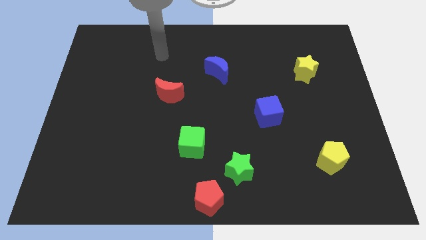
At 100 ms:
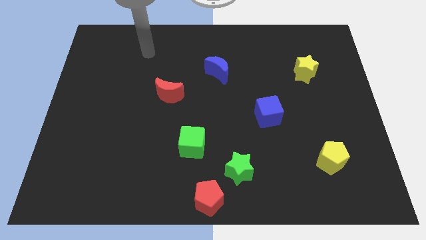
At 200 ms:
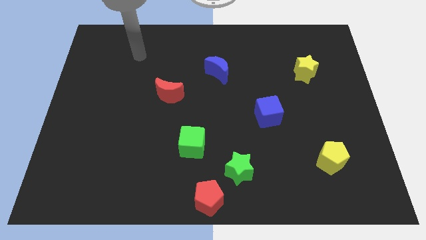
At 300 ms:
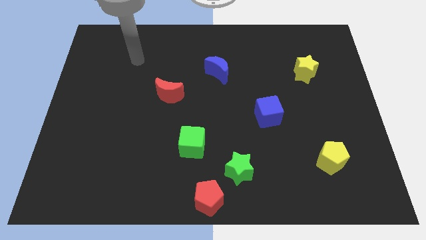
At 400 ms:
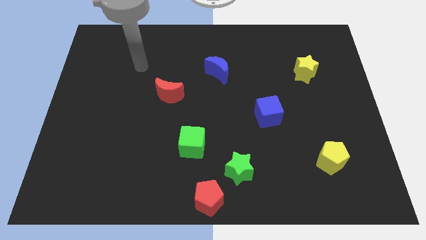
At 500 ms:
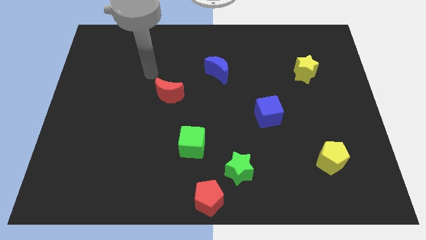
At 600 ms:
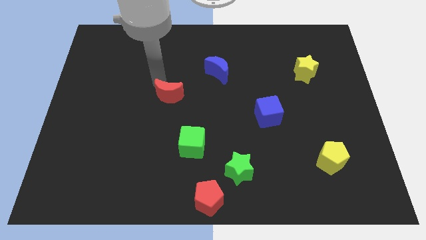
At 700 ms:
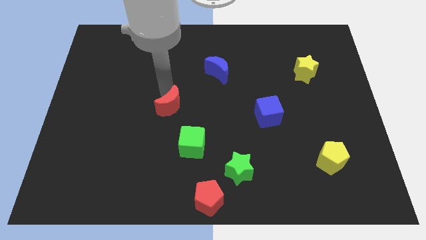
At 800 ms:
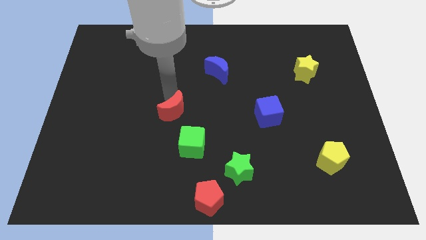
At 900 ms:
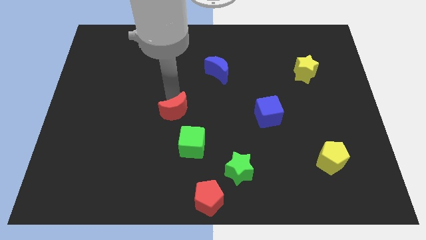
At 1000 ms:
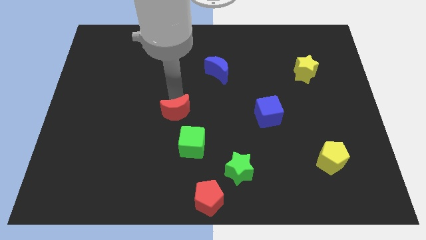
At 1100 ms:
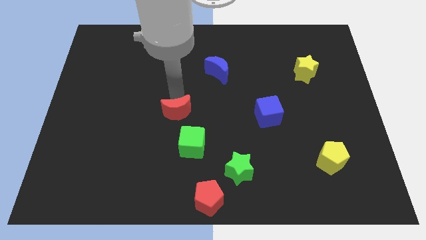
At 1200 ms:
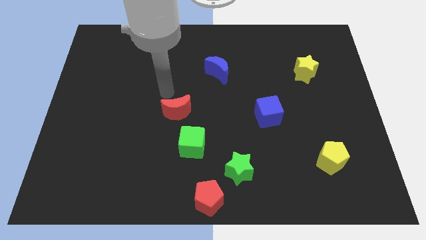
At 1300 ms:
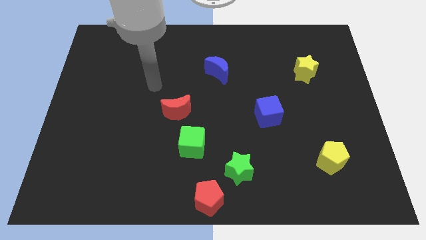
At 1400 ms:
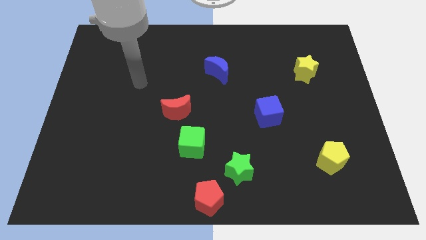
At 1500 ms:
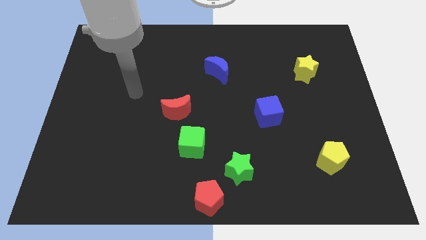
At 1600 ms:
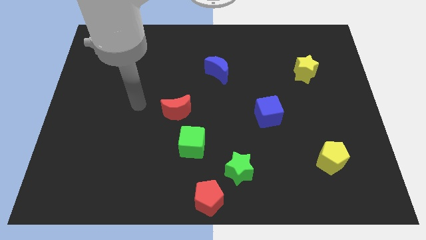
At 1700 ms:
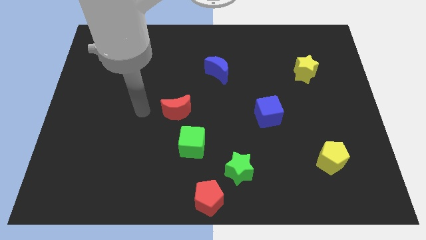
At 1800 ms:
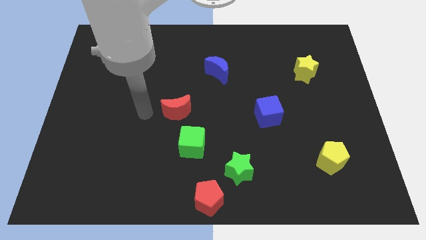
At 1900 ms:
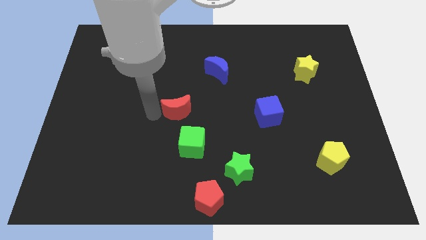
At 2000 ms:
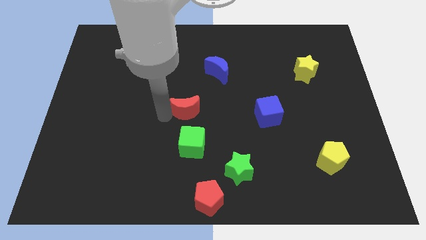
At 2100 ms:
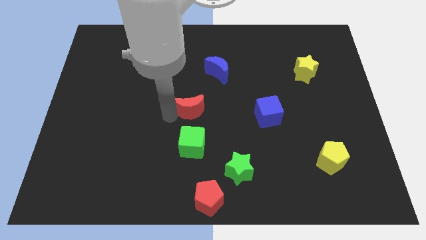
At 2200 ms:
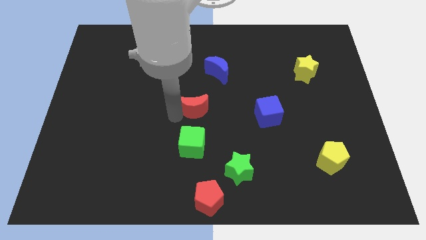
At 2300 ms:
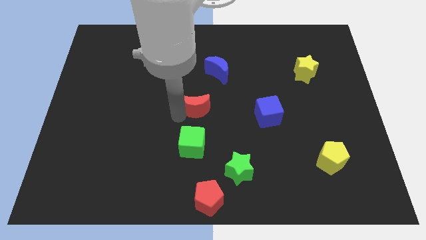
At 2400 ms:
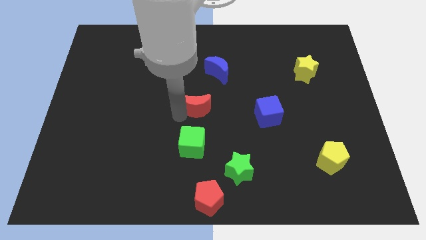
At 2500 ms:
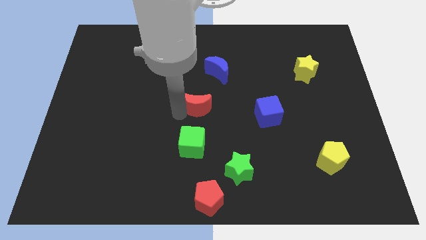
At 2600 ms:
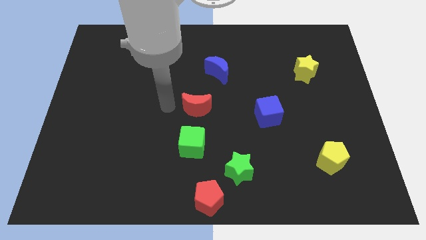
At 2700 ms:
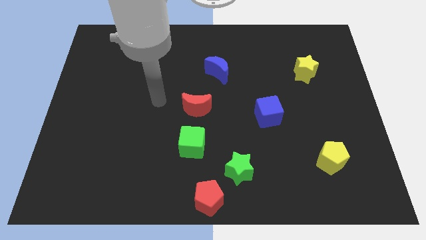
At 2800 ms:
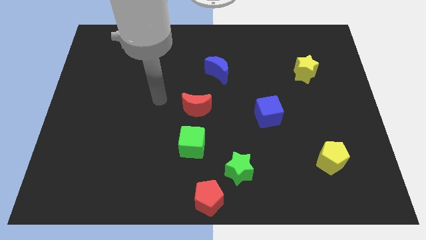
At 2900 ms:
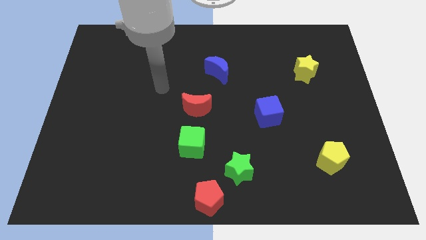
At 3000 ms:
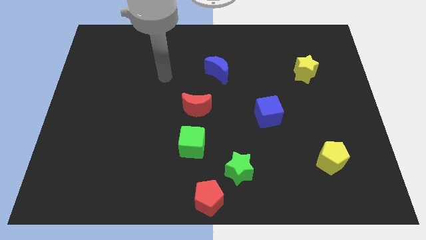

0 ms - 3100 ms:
slide red moon above green cube

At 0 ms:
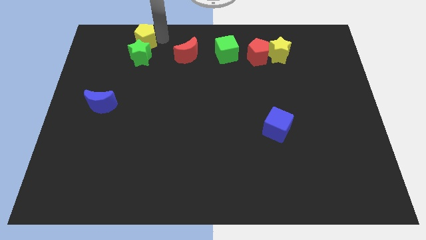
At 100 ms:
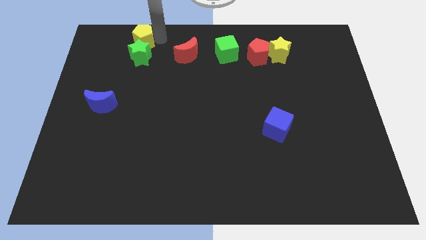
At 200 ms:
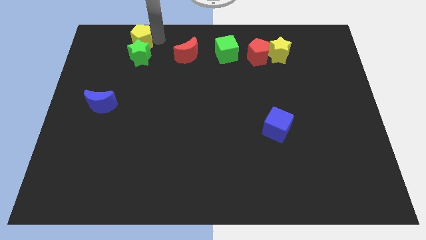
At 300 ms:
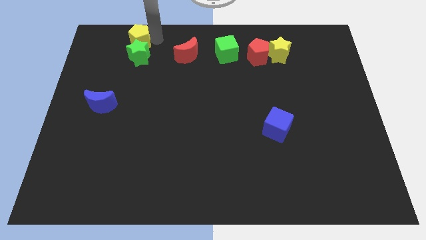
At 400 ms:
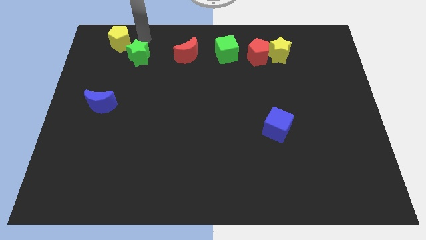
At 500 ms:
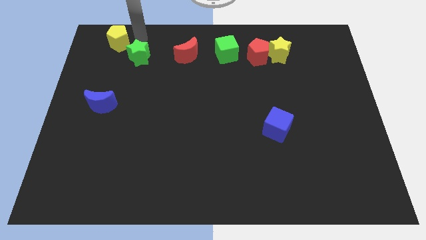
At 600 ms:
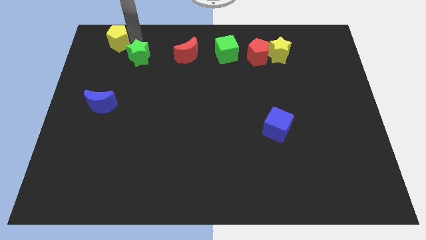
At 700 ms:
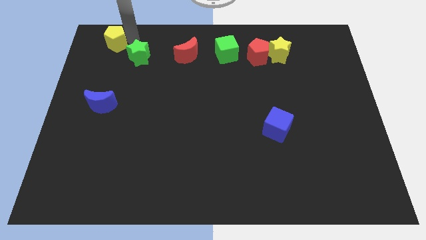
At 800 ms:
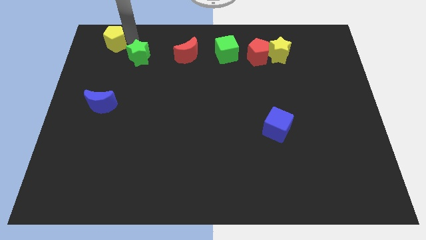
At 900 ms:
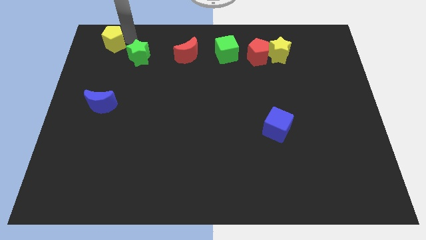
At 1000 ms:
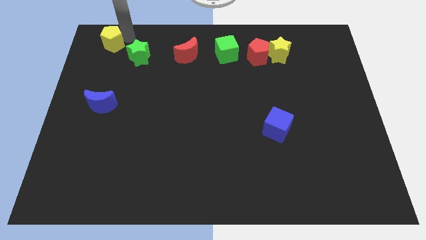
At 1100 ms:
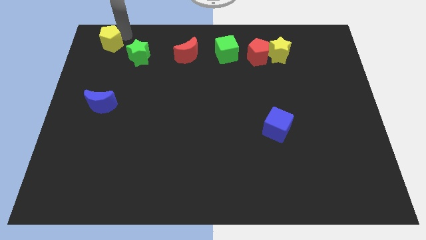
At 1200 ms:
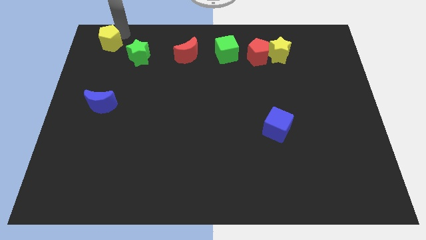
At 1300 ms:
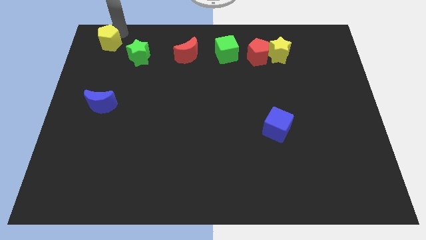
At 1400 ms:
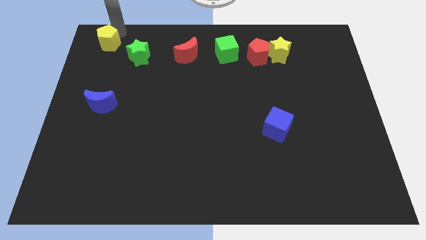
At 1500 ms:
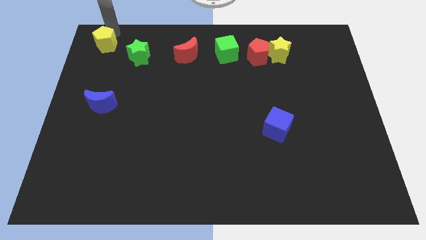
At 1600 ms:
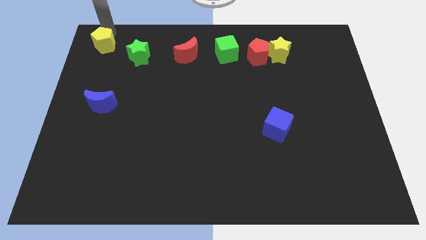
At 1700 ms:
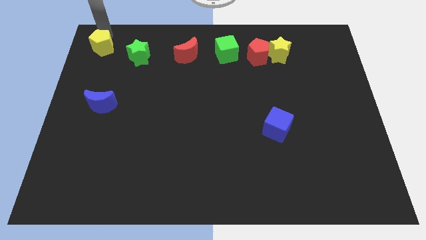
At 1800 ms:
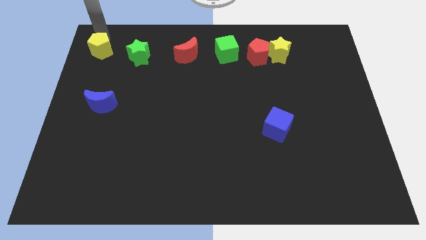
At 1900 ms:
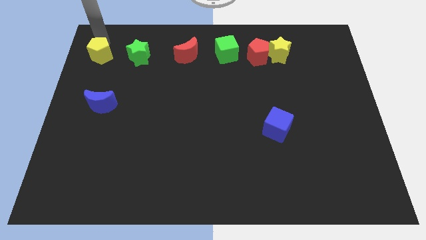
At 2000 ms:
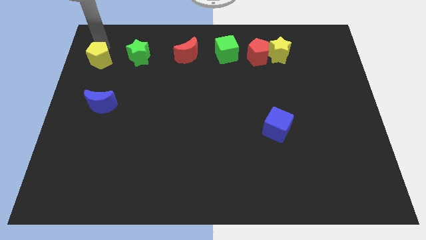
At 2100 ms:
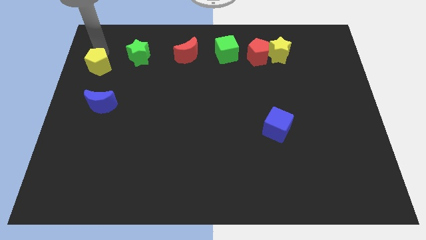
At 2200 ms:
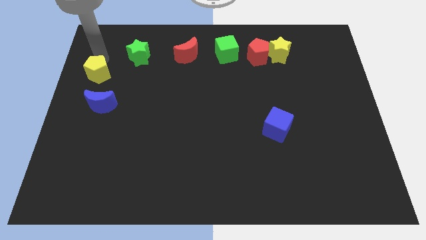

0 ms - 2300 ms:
move the yellow pentagon to the left of green star

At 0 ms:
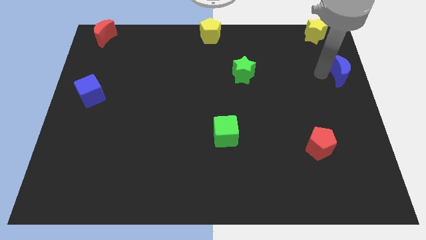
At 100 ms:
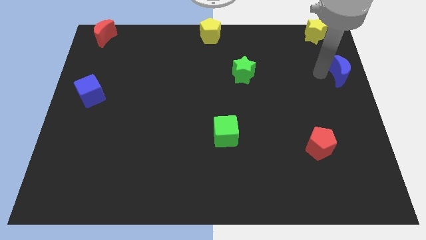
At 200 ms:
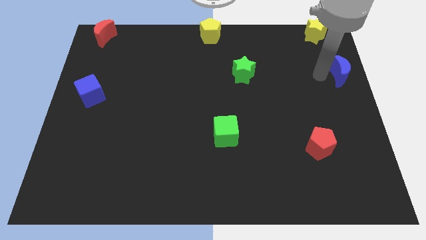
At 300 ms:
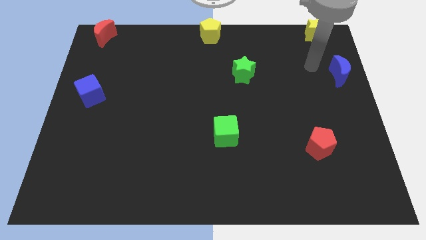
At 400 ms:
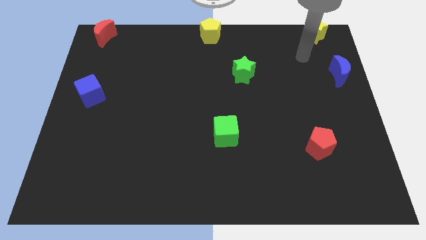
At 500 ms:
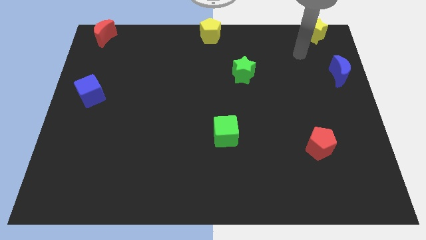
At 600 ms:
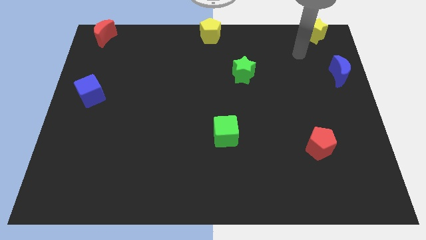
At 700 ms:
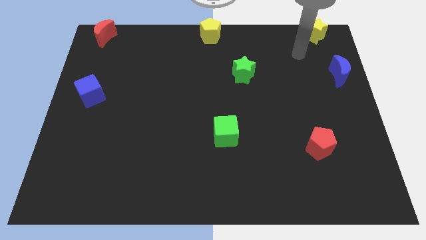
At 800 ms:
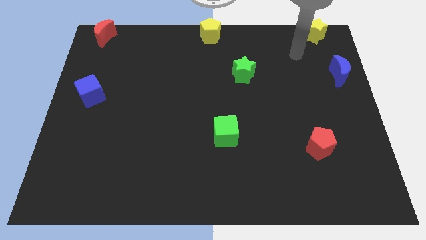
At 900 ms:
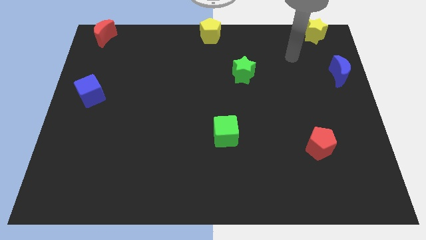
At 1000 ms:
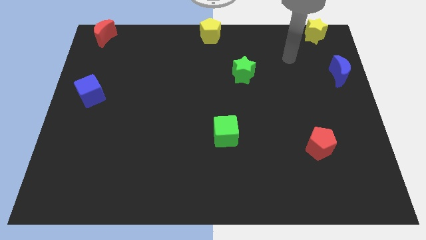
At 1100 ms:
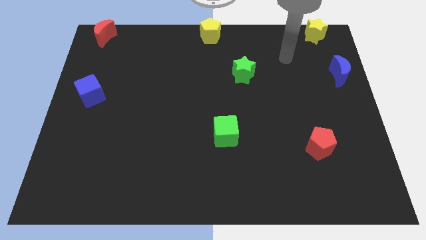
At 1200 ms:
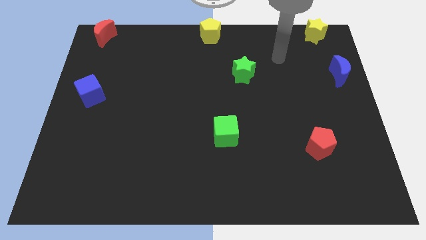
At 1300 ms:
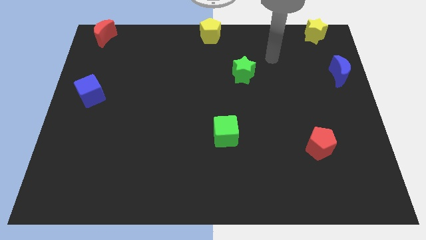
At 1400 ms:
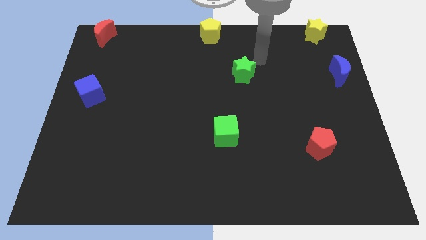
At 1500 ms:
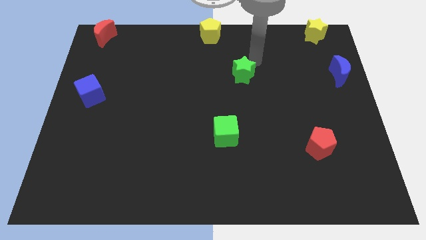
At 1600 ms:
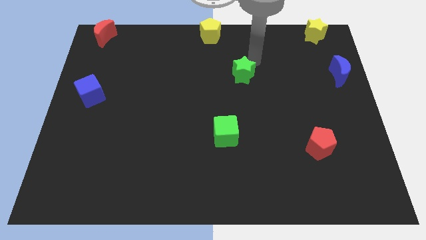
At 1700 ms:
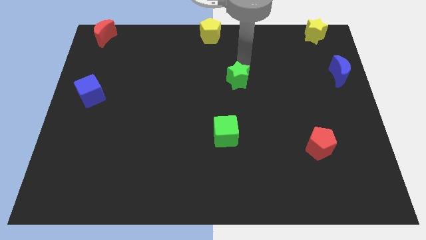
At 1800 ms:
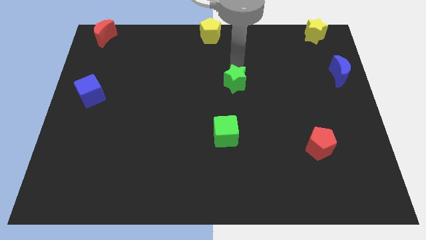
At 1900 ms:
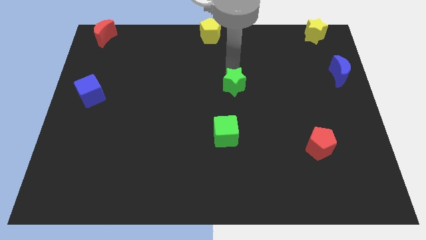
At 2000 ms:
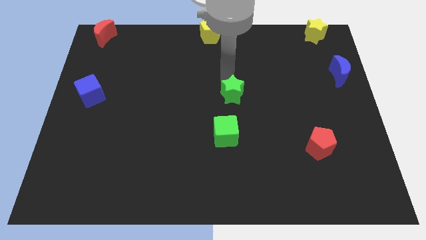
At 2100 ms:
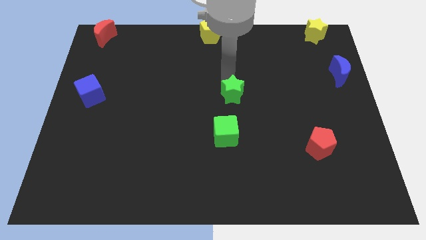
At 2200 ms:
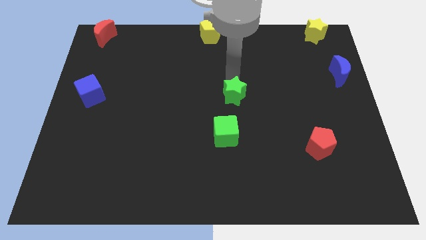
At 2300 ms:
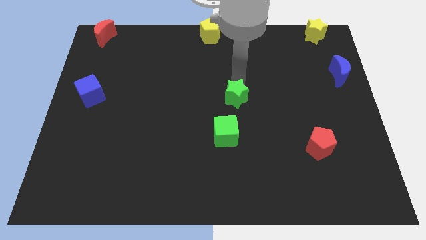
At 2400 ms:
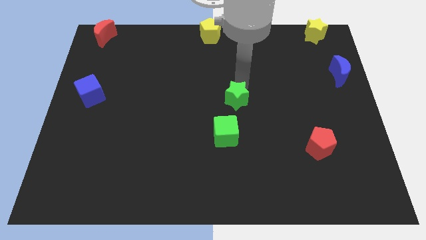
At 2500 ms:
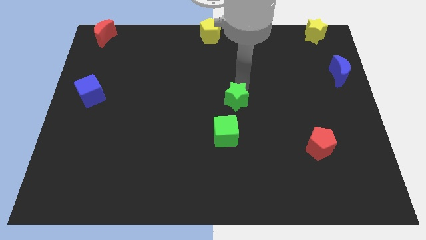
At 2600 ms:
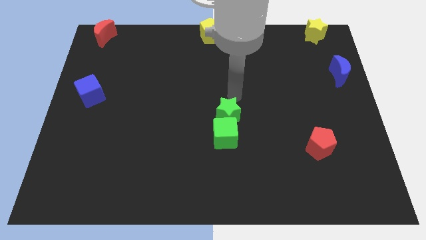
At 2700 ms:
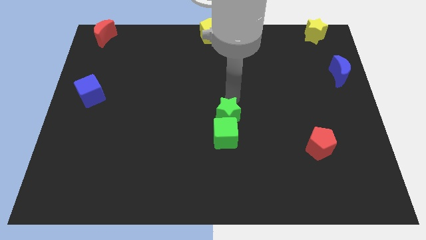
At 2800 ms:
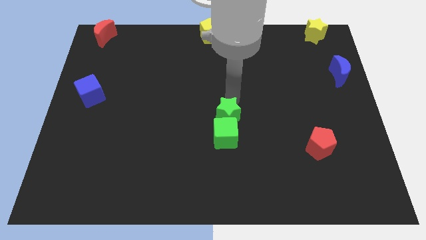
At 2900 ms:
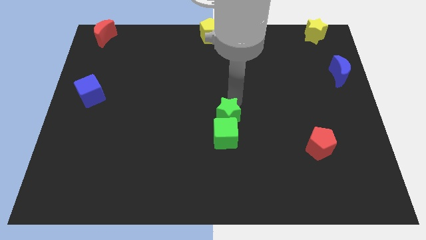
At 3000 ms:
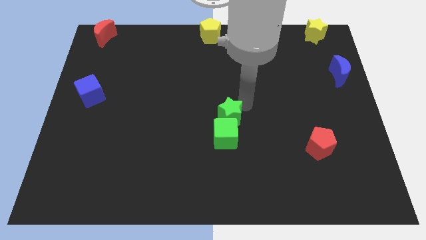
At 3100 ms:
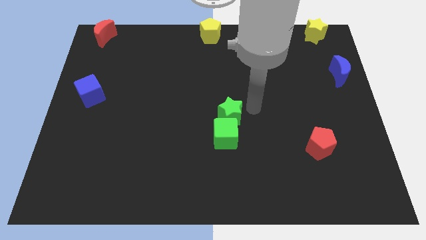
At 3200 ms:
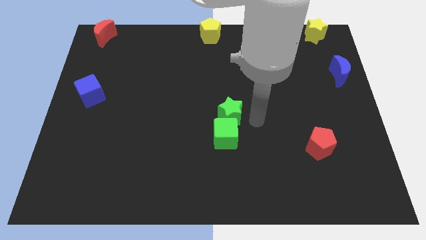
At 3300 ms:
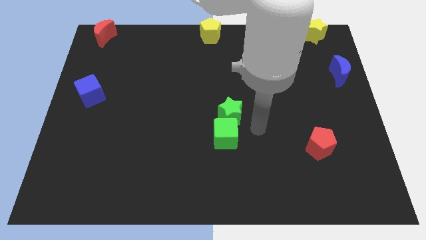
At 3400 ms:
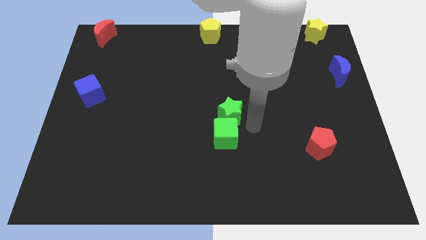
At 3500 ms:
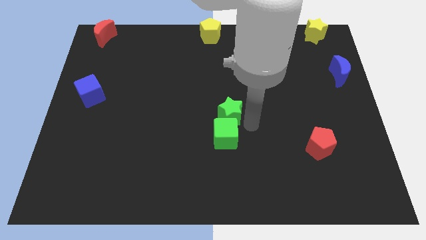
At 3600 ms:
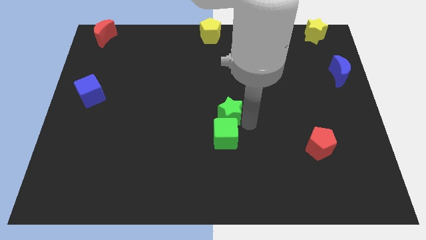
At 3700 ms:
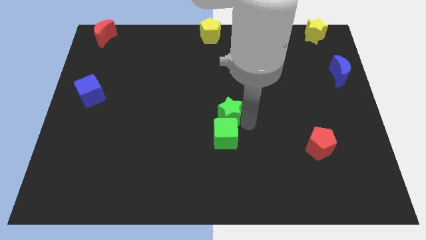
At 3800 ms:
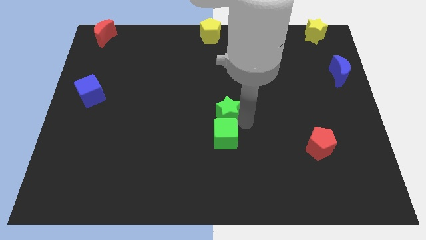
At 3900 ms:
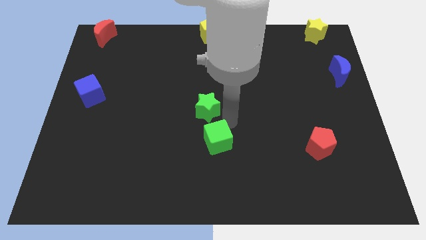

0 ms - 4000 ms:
push the green star into the green cube
